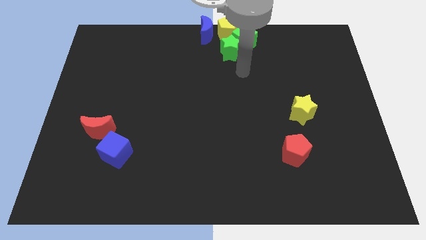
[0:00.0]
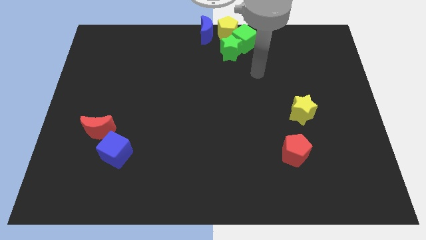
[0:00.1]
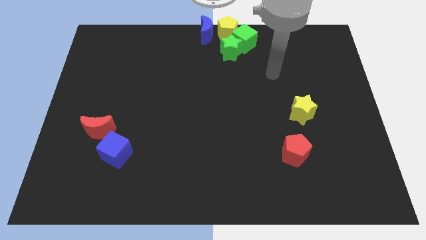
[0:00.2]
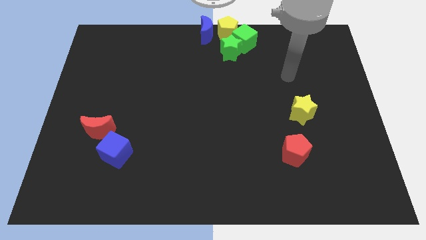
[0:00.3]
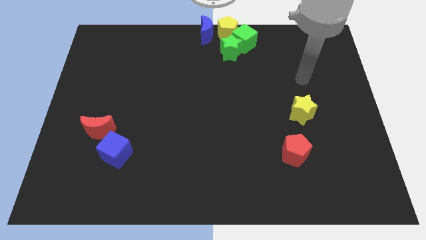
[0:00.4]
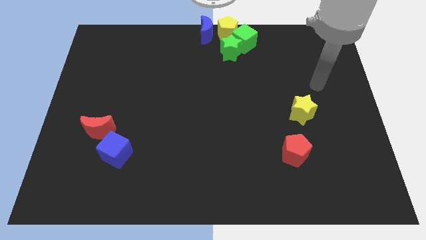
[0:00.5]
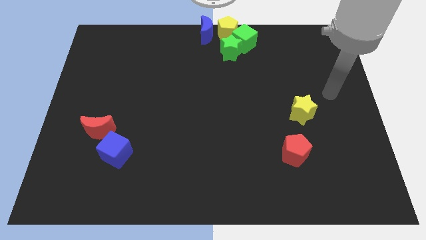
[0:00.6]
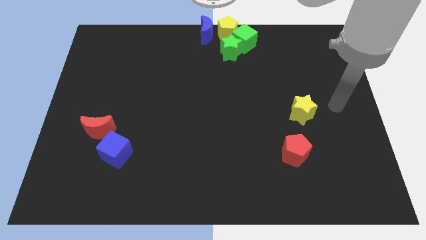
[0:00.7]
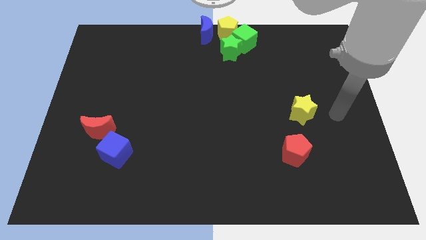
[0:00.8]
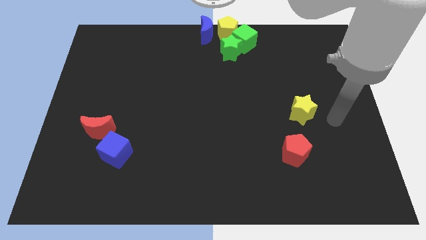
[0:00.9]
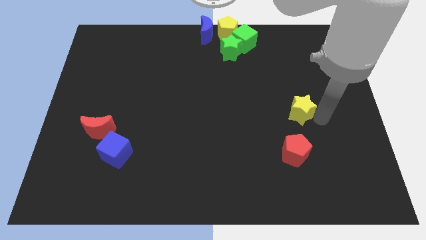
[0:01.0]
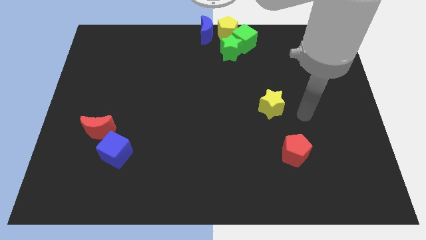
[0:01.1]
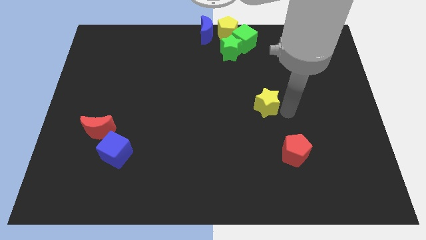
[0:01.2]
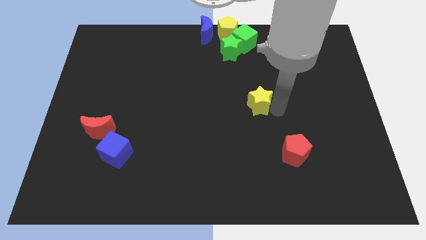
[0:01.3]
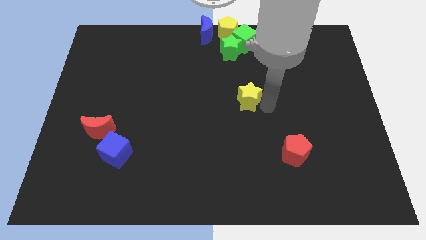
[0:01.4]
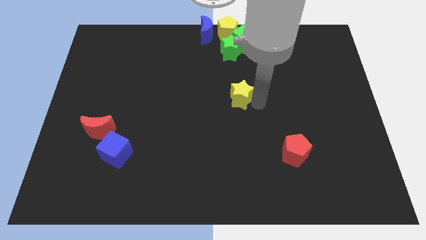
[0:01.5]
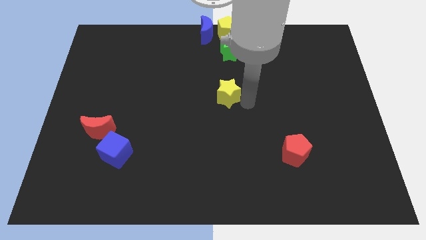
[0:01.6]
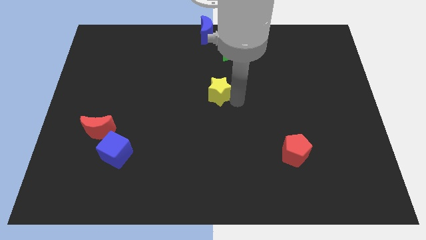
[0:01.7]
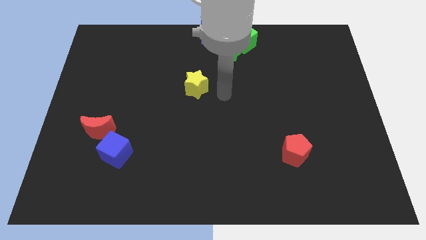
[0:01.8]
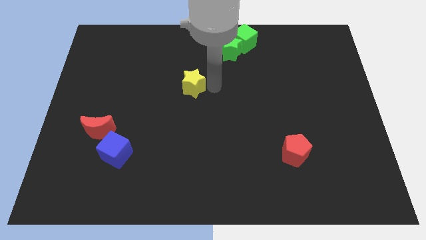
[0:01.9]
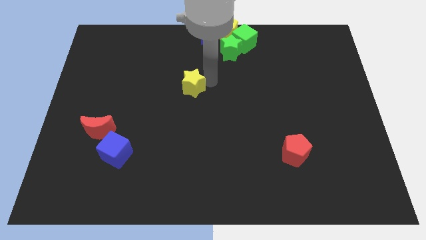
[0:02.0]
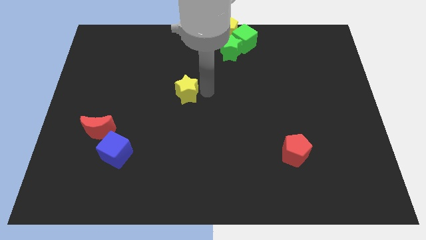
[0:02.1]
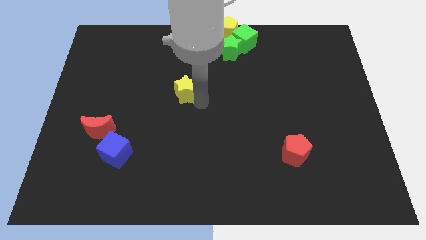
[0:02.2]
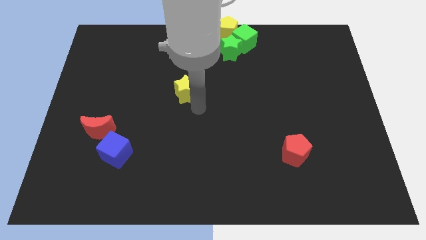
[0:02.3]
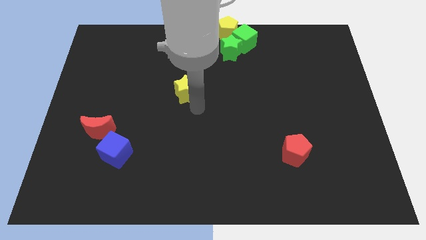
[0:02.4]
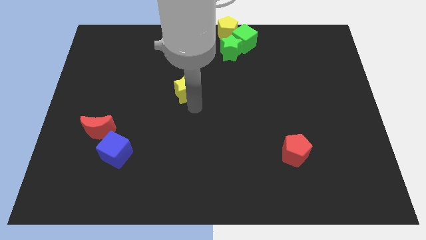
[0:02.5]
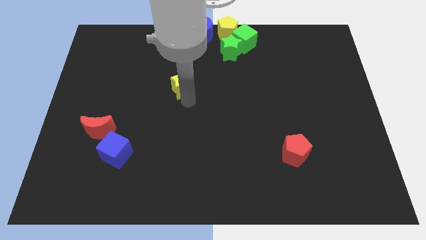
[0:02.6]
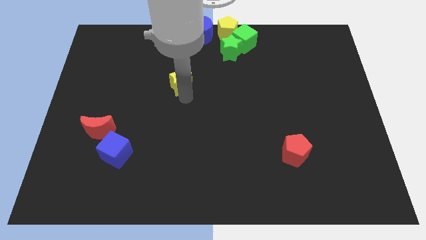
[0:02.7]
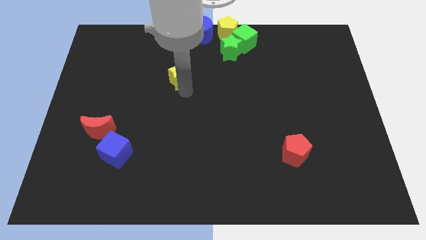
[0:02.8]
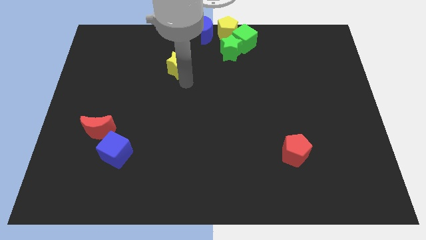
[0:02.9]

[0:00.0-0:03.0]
separate yellow star from red pentagon

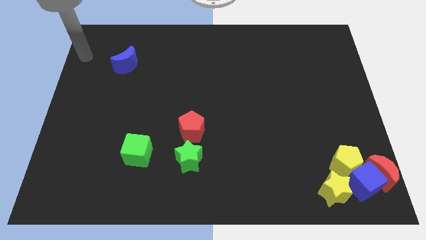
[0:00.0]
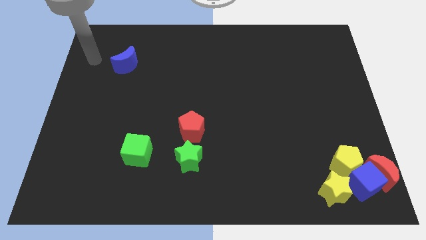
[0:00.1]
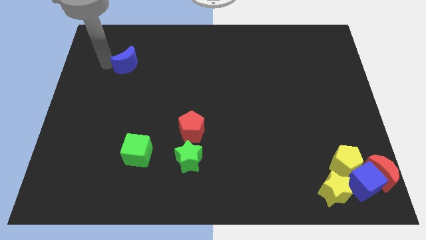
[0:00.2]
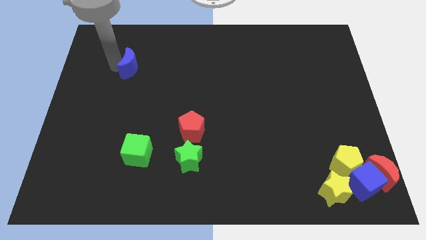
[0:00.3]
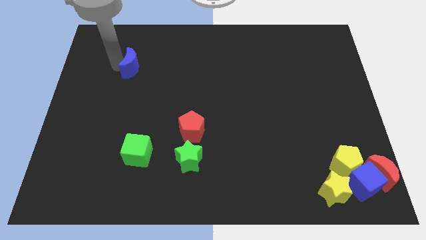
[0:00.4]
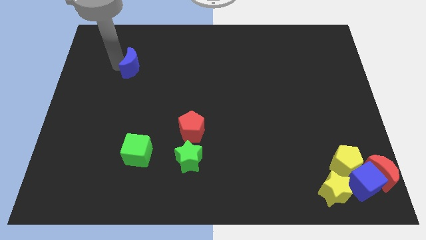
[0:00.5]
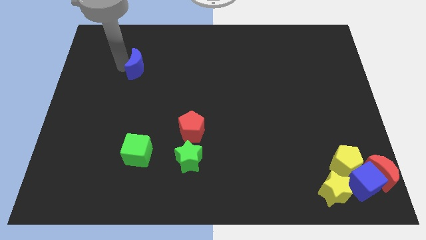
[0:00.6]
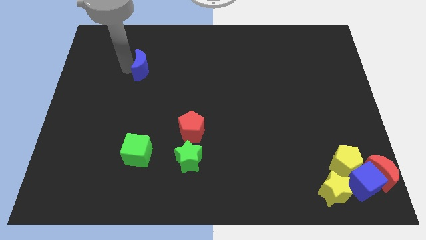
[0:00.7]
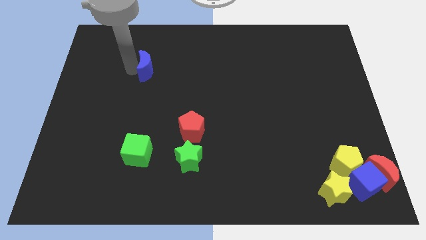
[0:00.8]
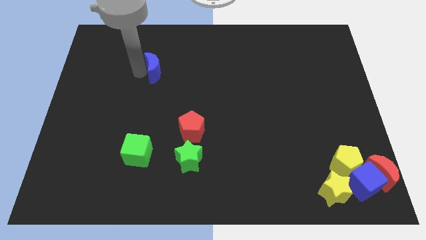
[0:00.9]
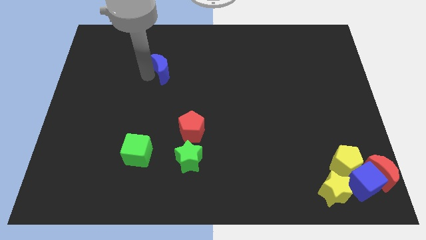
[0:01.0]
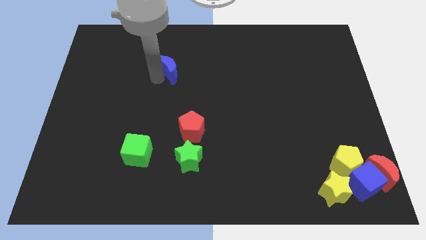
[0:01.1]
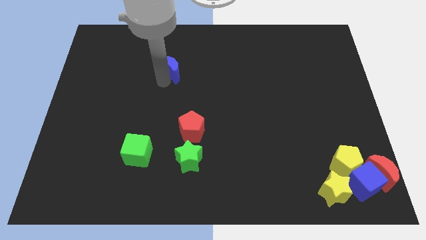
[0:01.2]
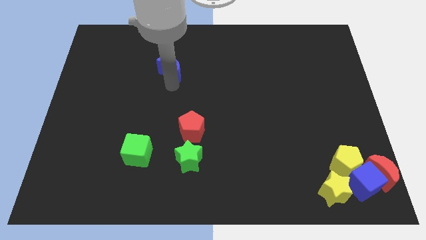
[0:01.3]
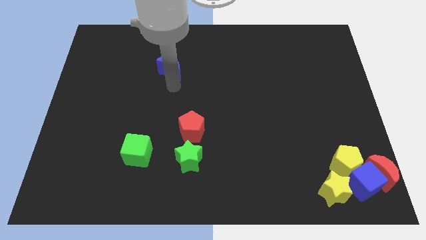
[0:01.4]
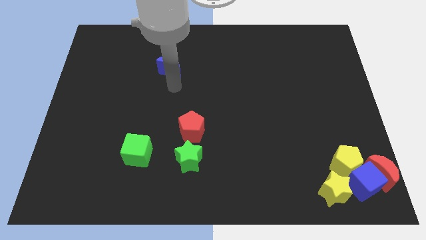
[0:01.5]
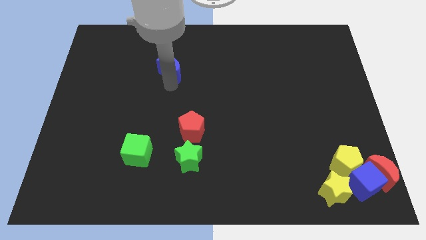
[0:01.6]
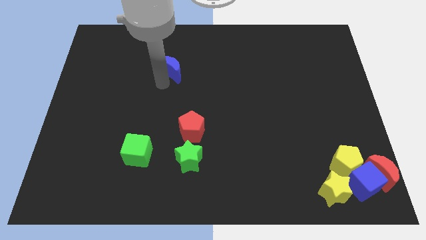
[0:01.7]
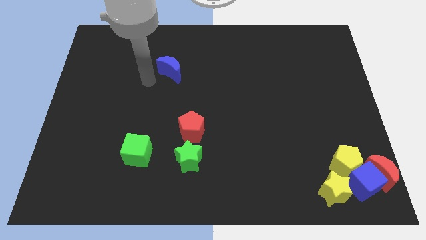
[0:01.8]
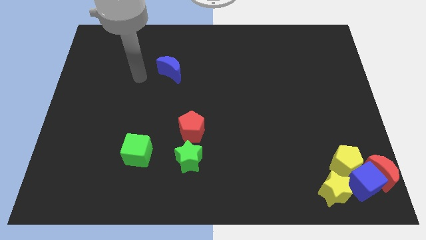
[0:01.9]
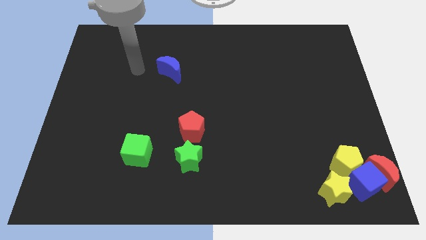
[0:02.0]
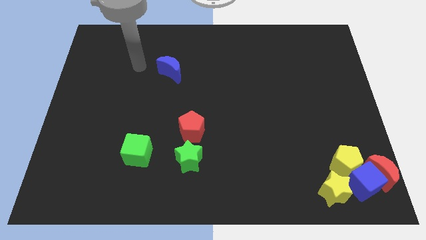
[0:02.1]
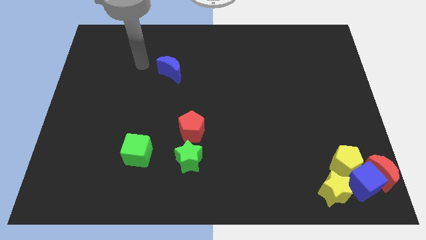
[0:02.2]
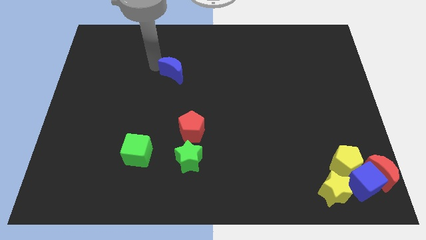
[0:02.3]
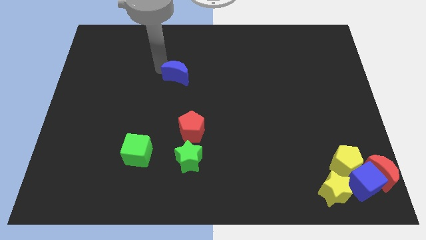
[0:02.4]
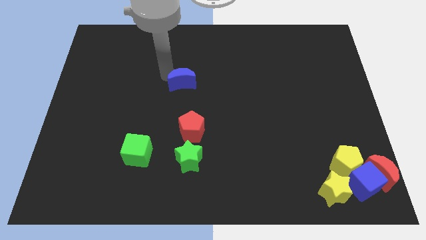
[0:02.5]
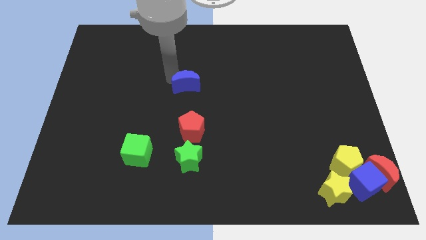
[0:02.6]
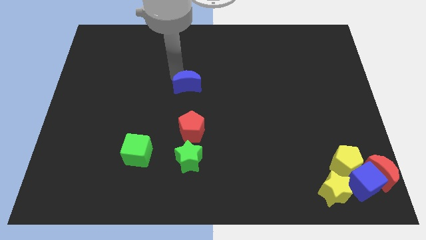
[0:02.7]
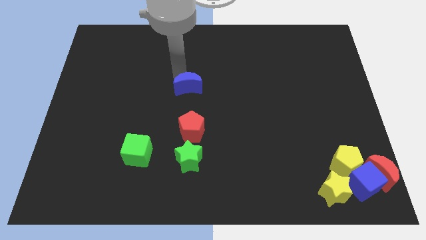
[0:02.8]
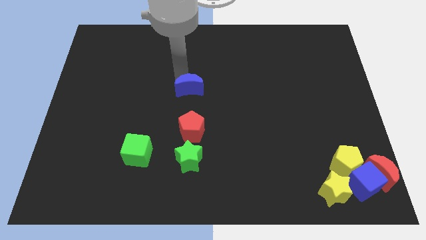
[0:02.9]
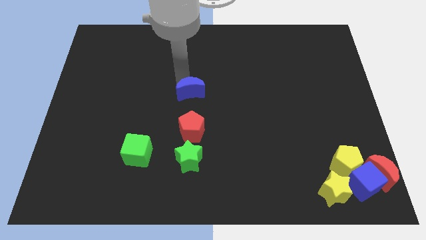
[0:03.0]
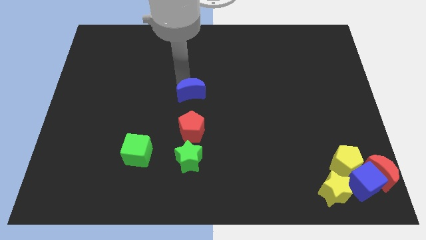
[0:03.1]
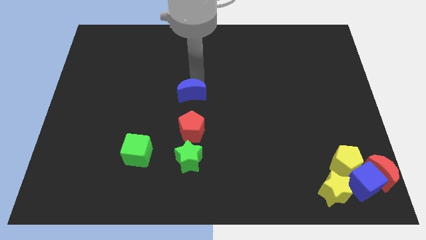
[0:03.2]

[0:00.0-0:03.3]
move the blue crescent towards the top of the red pentagon

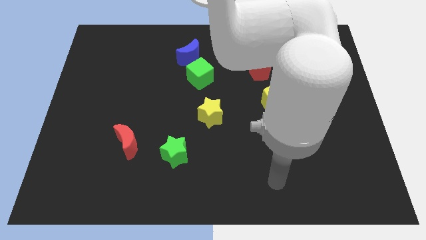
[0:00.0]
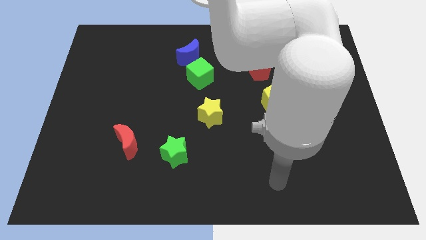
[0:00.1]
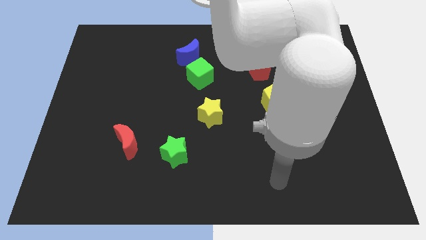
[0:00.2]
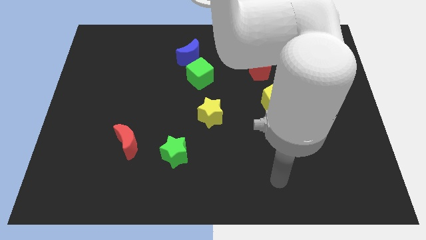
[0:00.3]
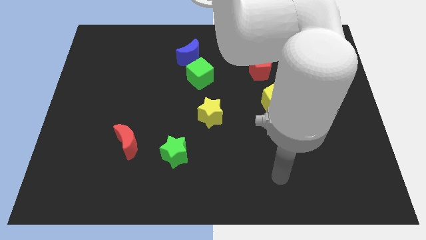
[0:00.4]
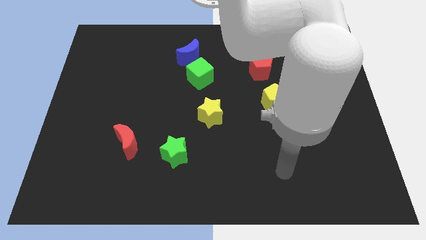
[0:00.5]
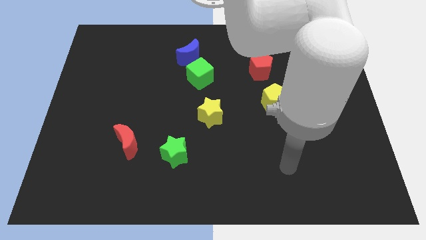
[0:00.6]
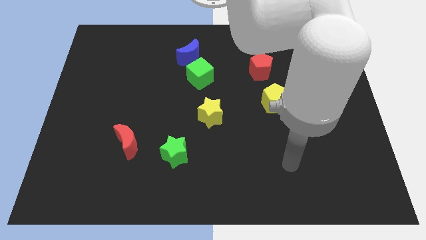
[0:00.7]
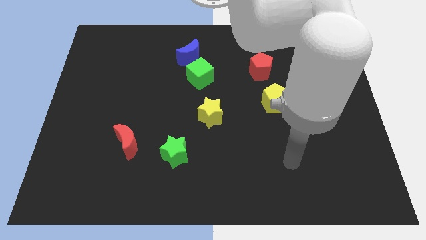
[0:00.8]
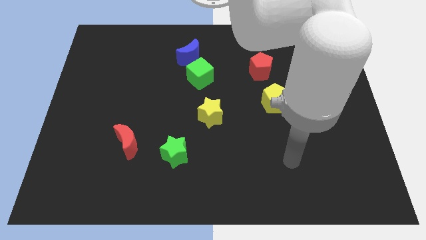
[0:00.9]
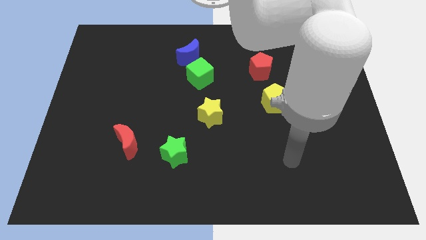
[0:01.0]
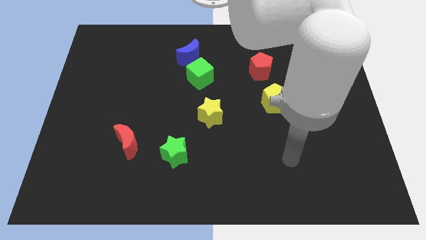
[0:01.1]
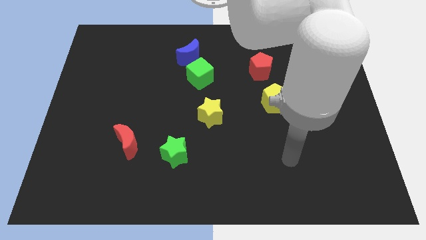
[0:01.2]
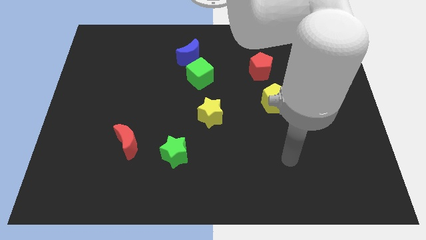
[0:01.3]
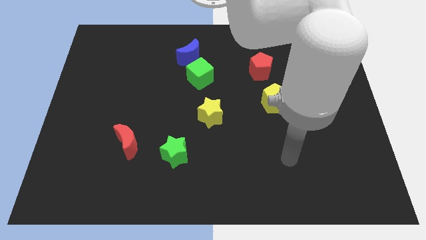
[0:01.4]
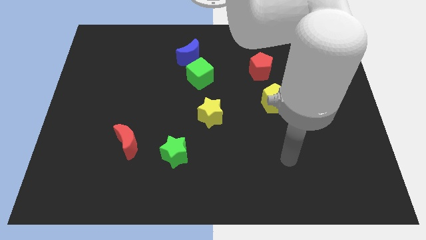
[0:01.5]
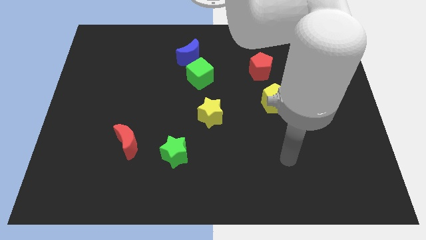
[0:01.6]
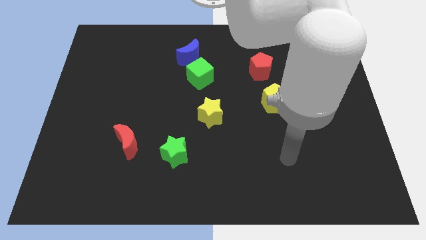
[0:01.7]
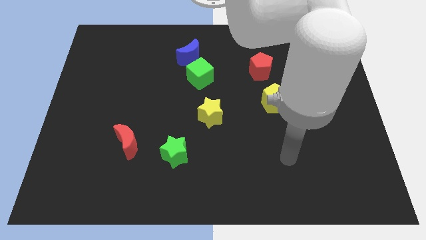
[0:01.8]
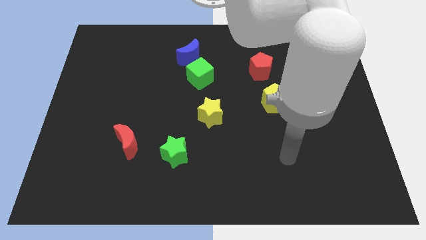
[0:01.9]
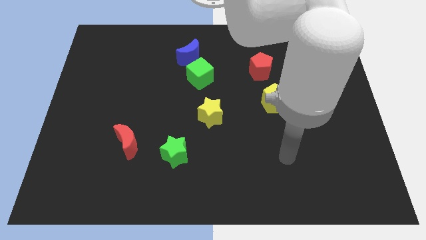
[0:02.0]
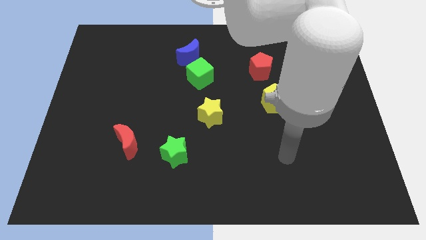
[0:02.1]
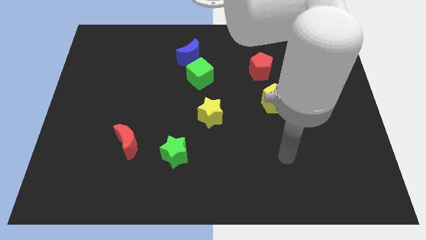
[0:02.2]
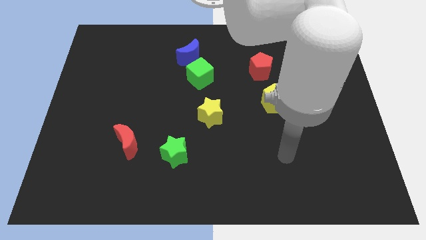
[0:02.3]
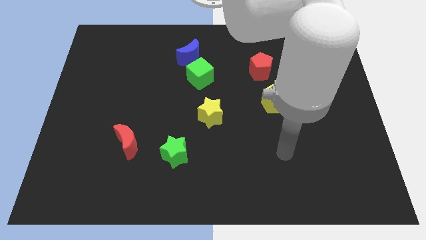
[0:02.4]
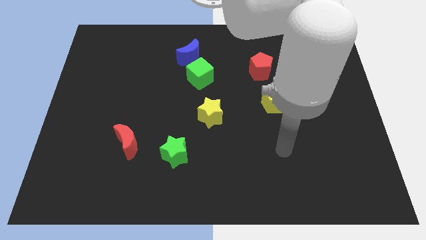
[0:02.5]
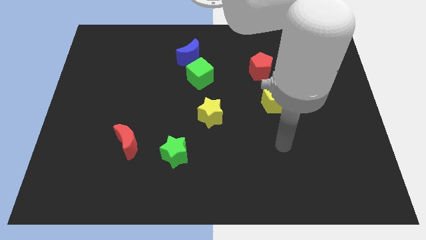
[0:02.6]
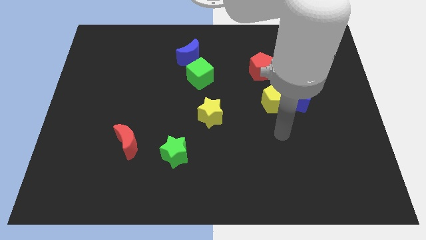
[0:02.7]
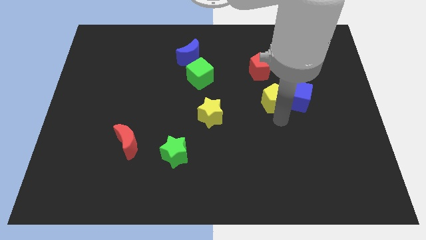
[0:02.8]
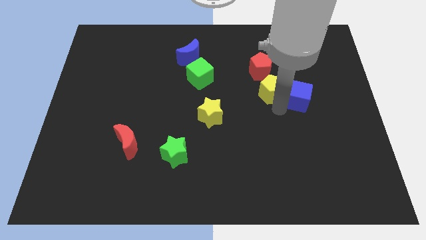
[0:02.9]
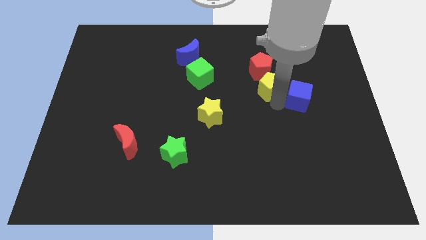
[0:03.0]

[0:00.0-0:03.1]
place the arm under the yellow pentagon
